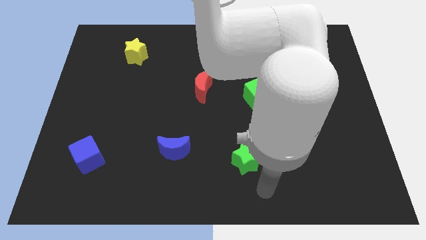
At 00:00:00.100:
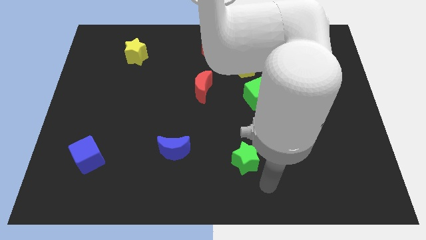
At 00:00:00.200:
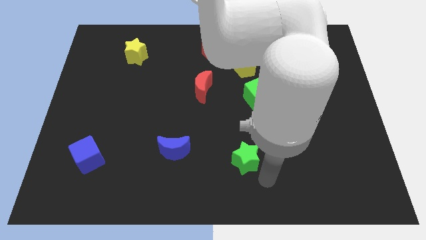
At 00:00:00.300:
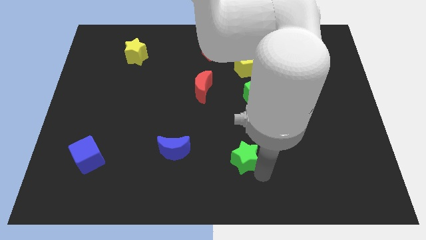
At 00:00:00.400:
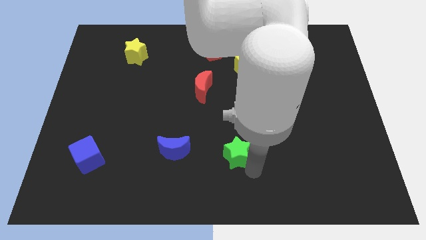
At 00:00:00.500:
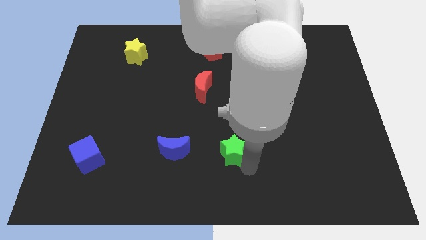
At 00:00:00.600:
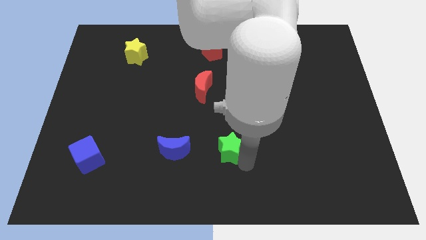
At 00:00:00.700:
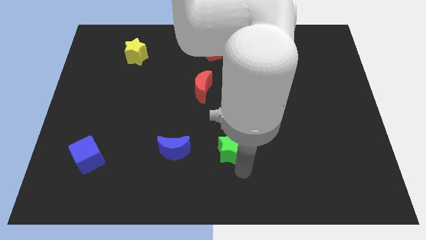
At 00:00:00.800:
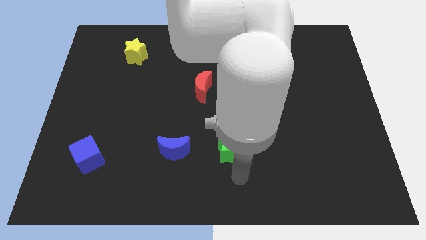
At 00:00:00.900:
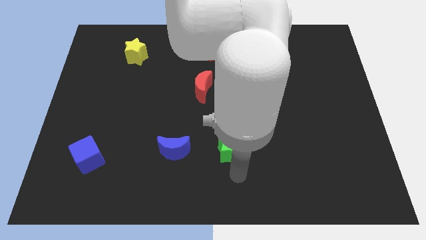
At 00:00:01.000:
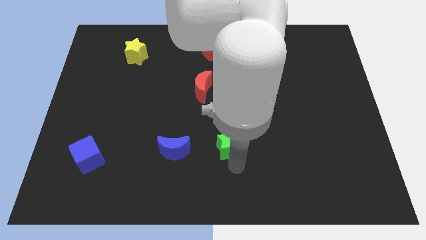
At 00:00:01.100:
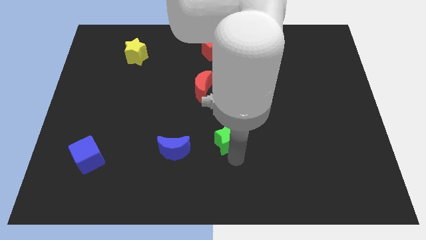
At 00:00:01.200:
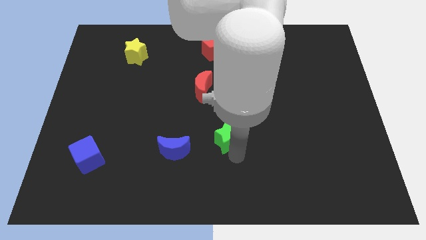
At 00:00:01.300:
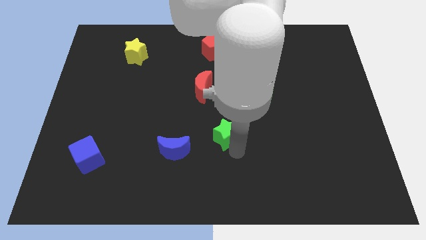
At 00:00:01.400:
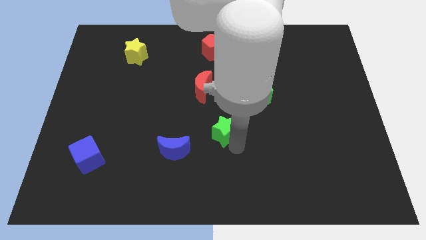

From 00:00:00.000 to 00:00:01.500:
move green star towards bottom center of the board

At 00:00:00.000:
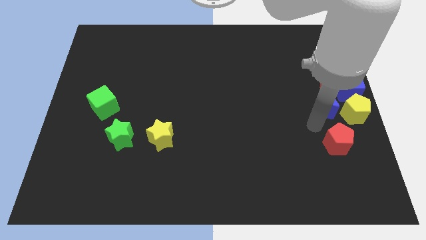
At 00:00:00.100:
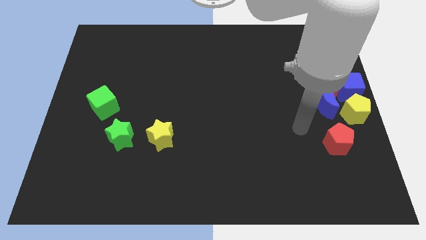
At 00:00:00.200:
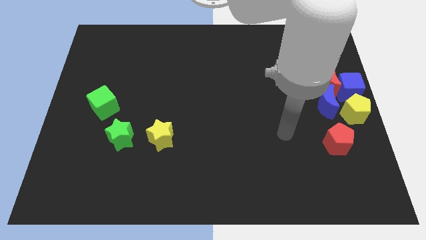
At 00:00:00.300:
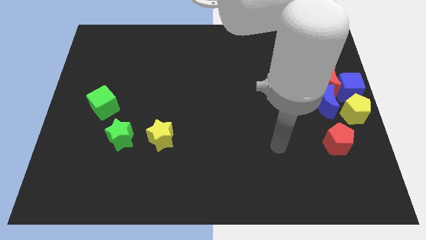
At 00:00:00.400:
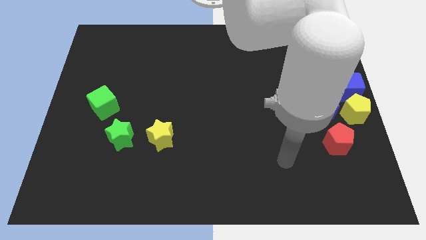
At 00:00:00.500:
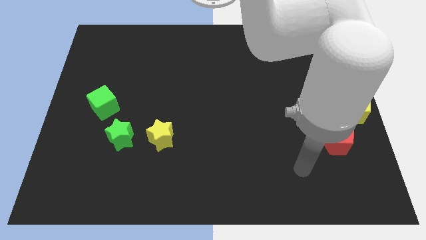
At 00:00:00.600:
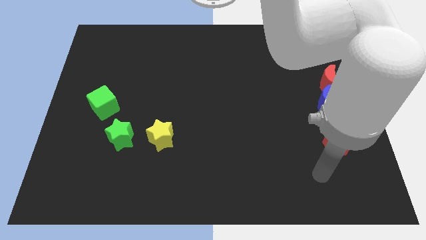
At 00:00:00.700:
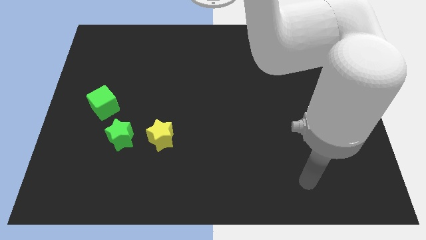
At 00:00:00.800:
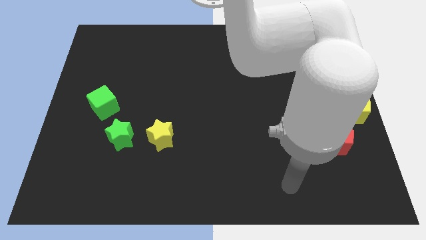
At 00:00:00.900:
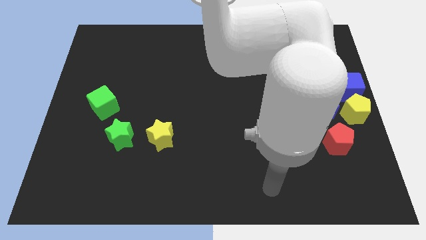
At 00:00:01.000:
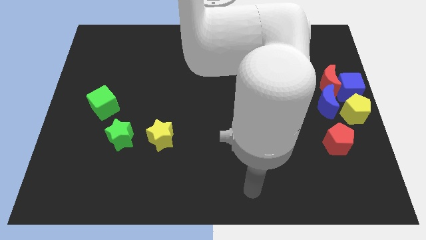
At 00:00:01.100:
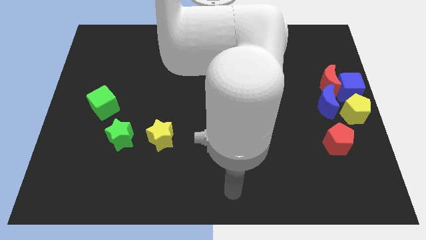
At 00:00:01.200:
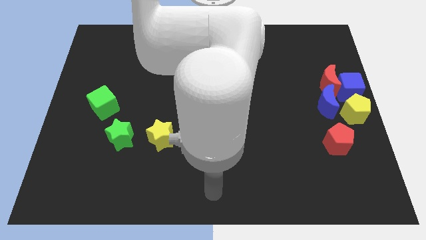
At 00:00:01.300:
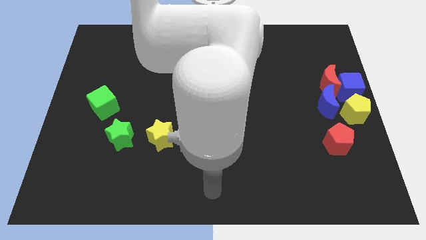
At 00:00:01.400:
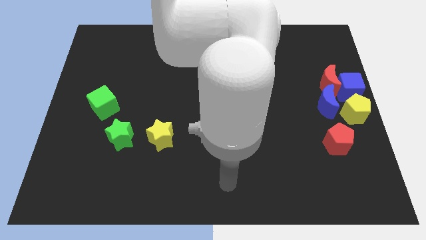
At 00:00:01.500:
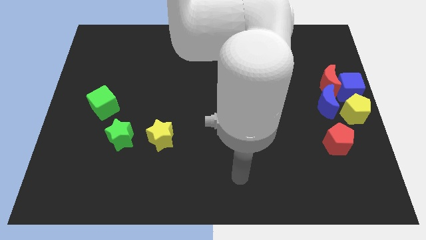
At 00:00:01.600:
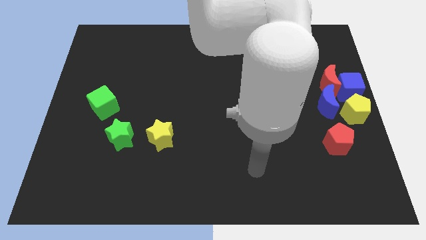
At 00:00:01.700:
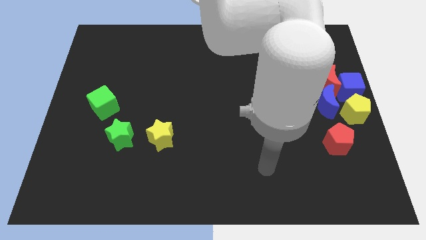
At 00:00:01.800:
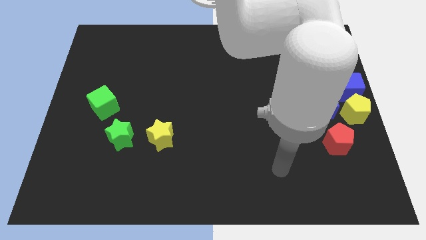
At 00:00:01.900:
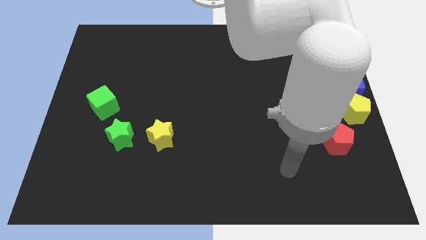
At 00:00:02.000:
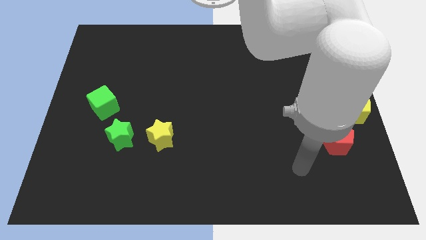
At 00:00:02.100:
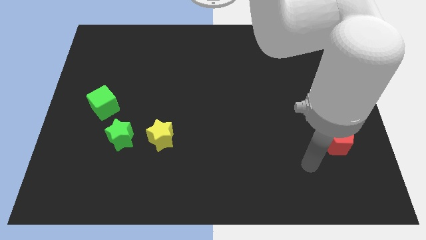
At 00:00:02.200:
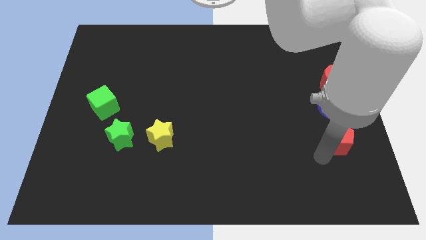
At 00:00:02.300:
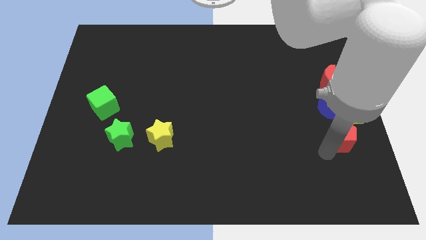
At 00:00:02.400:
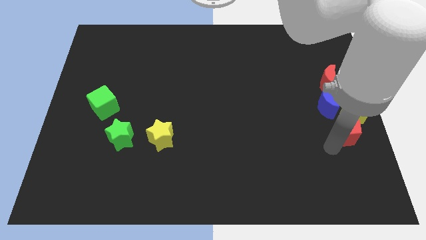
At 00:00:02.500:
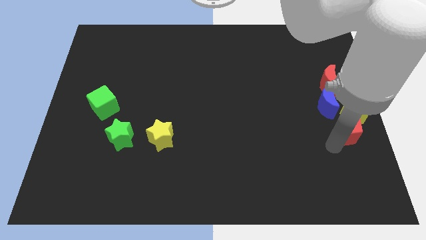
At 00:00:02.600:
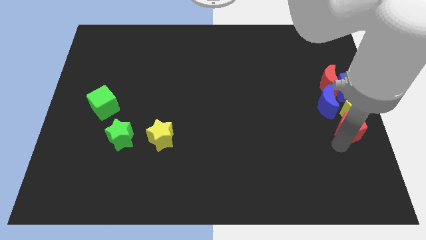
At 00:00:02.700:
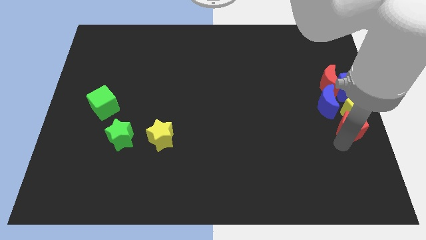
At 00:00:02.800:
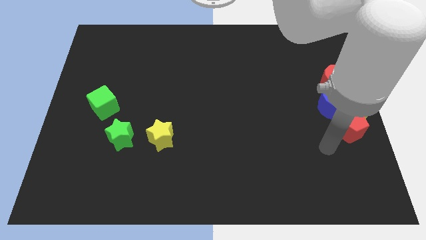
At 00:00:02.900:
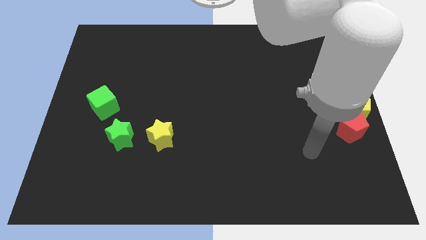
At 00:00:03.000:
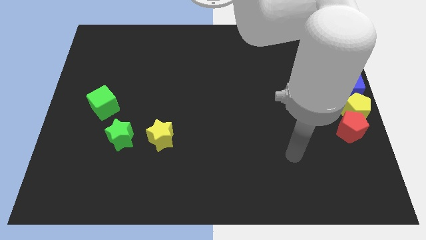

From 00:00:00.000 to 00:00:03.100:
push red pentagon into yellow pentagon

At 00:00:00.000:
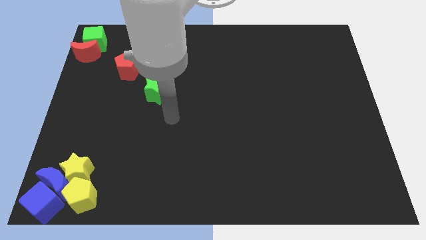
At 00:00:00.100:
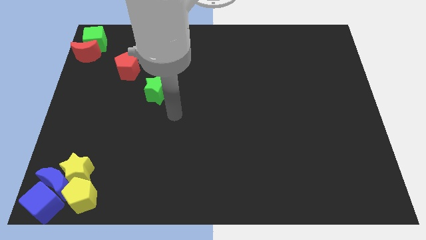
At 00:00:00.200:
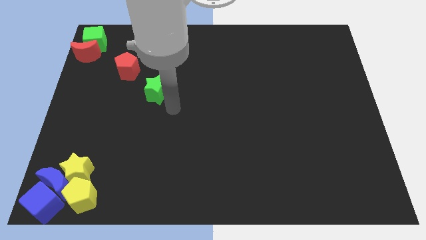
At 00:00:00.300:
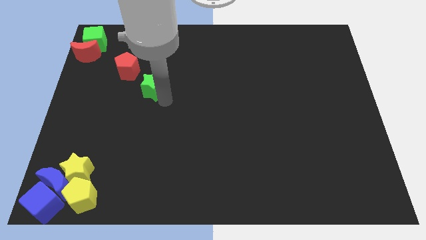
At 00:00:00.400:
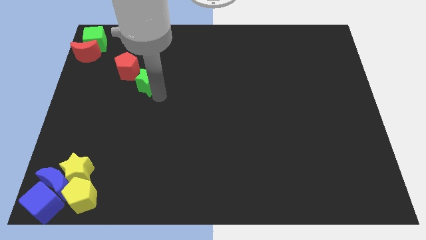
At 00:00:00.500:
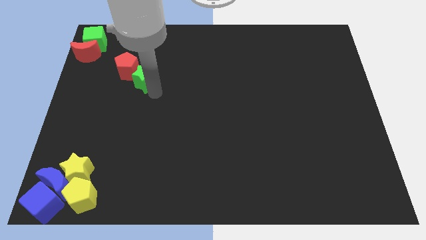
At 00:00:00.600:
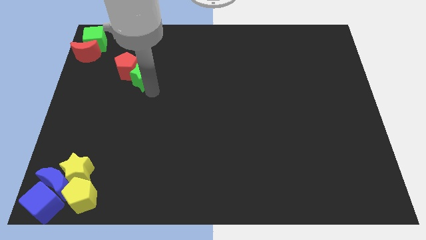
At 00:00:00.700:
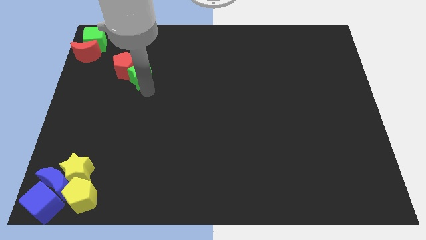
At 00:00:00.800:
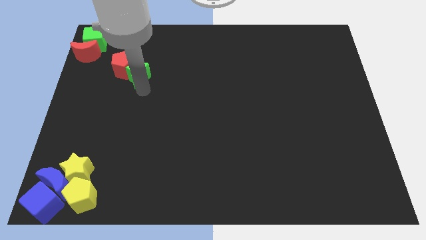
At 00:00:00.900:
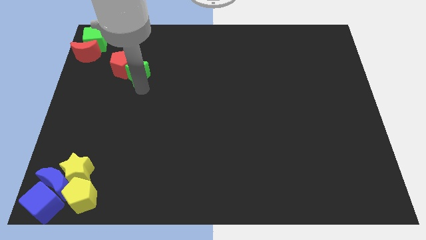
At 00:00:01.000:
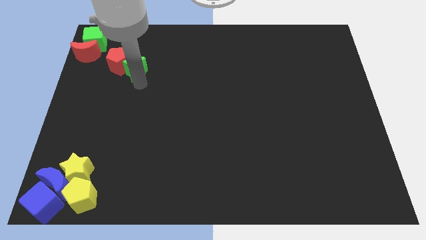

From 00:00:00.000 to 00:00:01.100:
push the green star into the red pentagon

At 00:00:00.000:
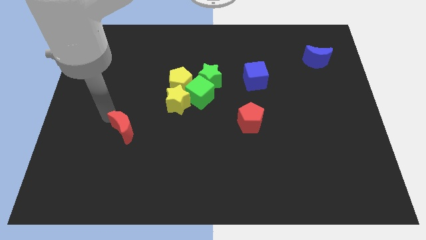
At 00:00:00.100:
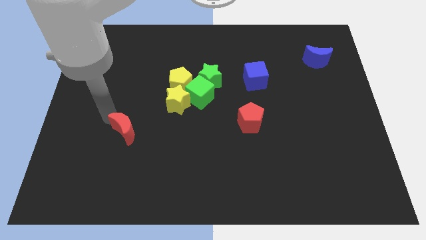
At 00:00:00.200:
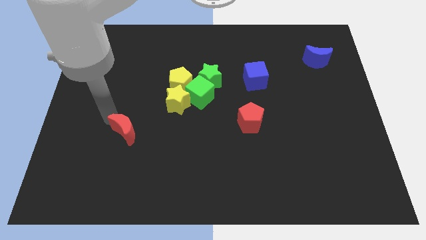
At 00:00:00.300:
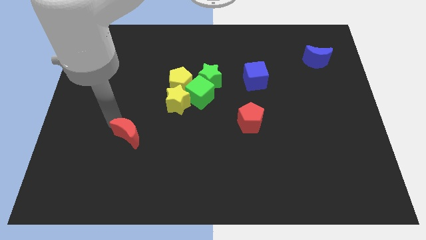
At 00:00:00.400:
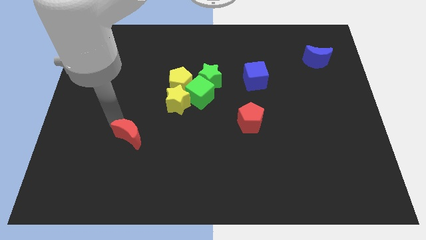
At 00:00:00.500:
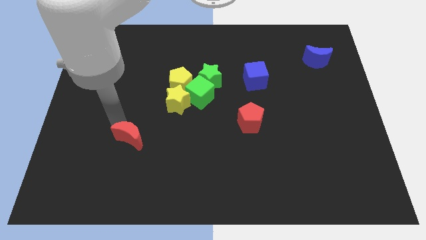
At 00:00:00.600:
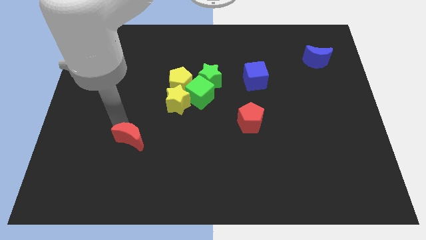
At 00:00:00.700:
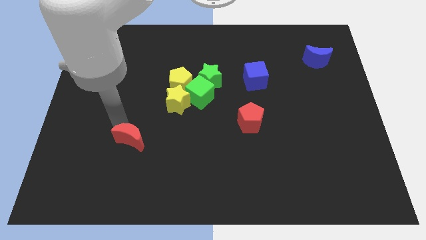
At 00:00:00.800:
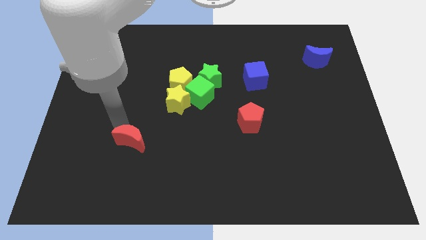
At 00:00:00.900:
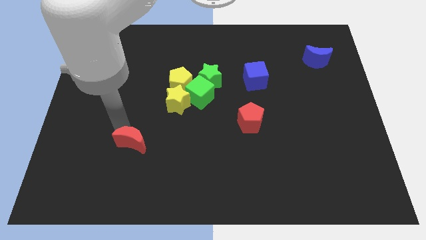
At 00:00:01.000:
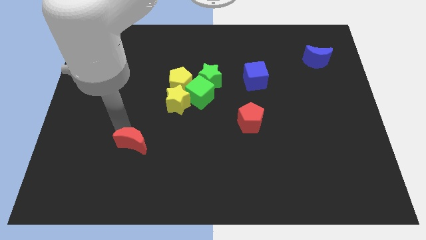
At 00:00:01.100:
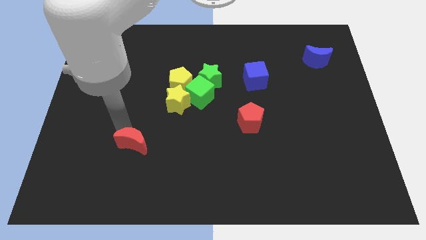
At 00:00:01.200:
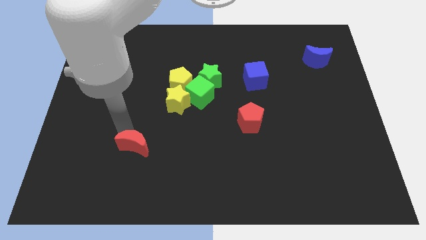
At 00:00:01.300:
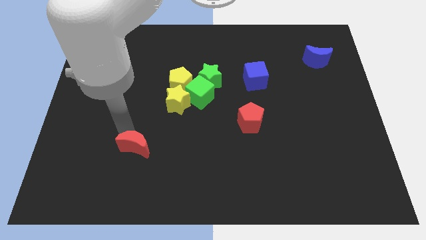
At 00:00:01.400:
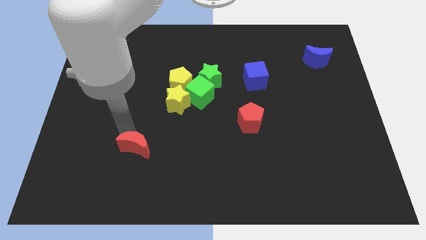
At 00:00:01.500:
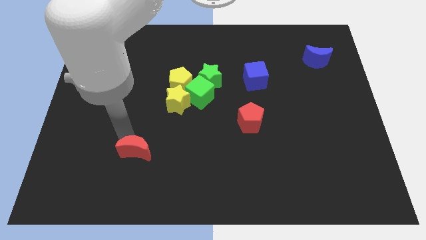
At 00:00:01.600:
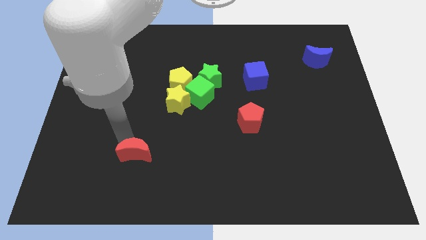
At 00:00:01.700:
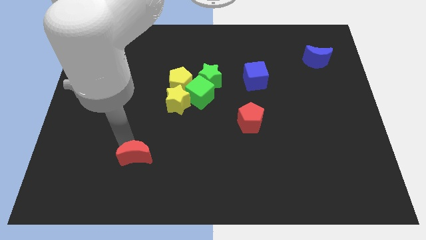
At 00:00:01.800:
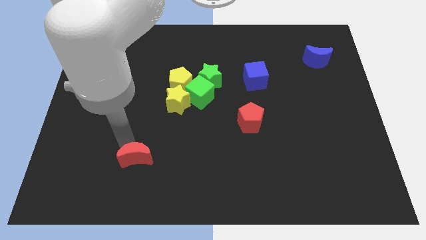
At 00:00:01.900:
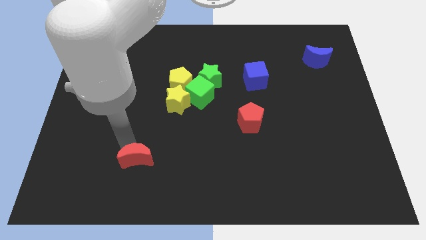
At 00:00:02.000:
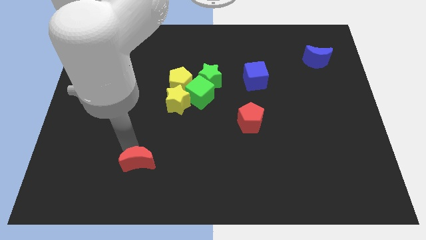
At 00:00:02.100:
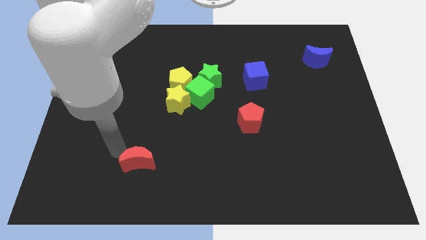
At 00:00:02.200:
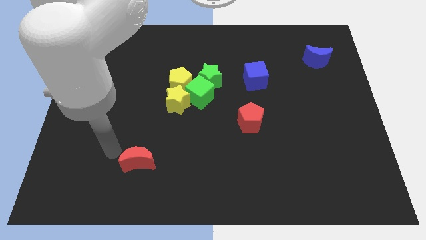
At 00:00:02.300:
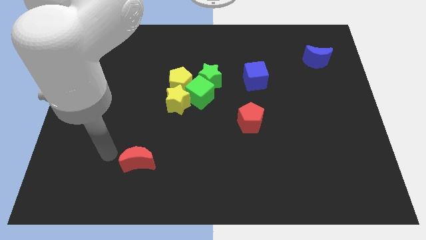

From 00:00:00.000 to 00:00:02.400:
place the red crescent to the bottom center of the board

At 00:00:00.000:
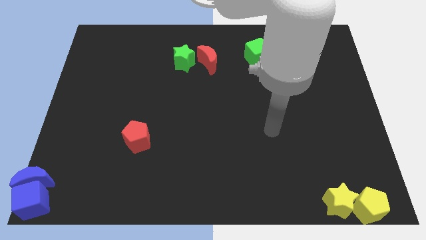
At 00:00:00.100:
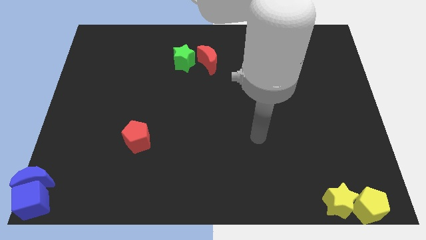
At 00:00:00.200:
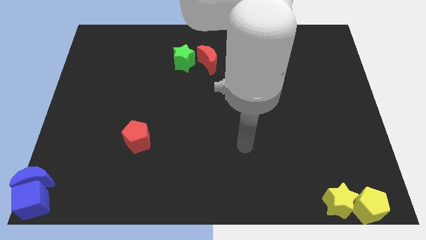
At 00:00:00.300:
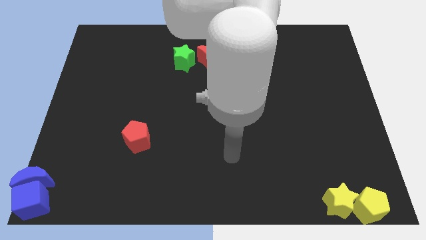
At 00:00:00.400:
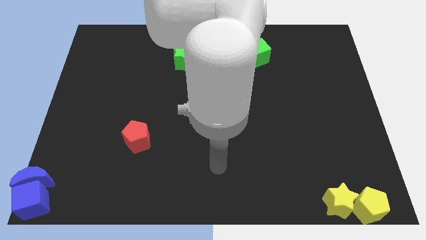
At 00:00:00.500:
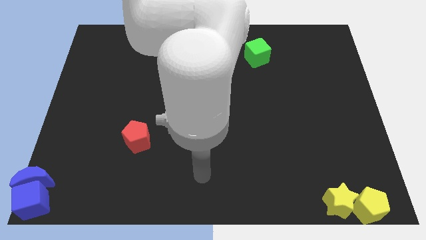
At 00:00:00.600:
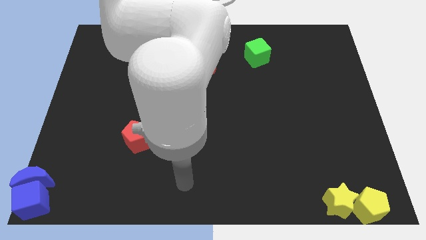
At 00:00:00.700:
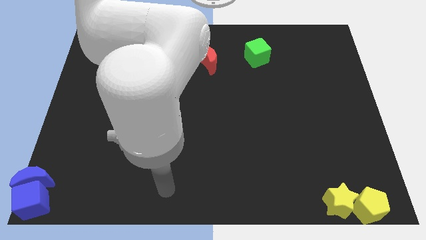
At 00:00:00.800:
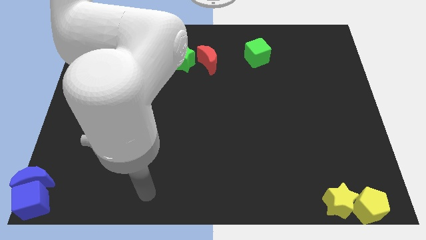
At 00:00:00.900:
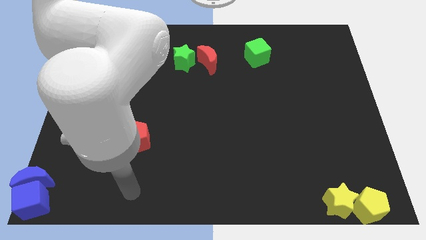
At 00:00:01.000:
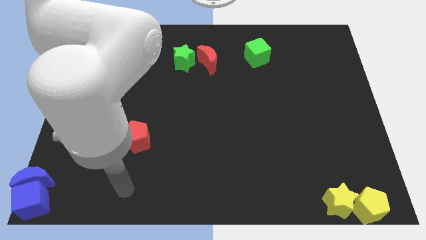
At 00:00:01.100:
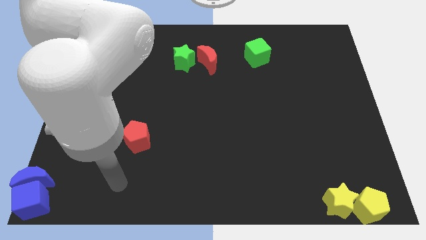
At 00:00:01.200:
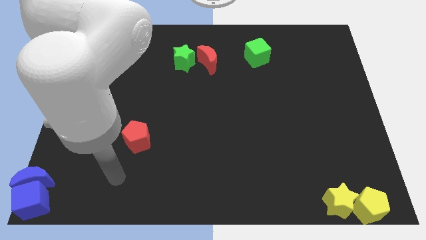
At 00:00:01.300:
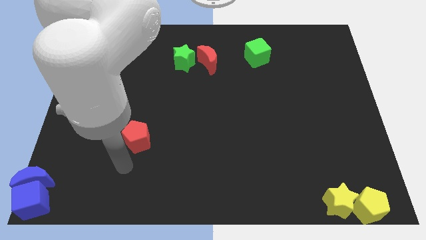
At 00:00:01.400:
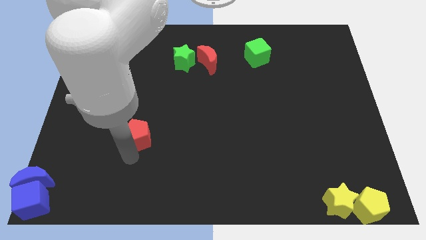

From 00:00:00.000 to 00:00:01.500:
move your arm towards the red pantagon
